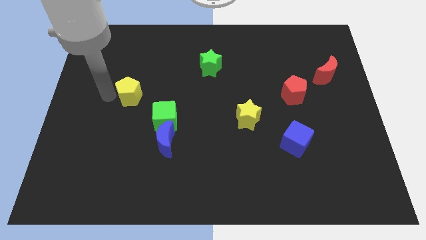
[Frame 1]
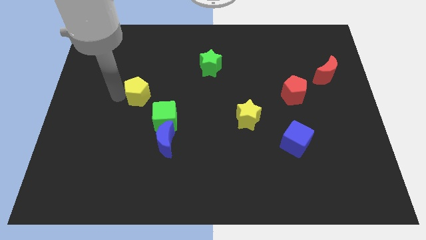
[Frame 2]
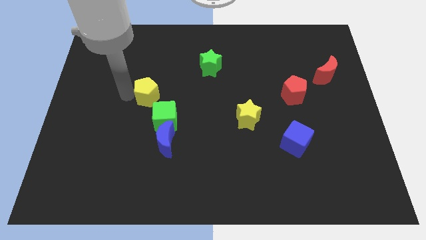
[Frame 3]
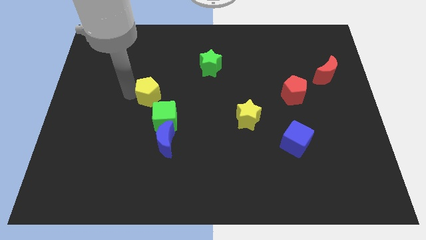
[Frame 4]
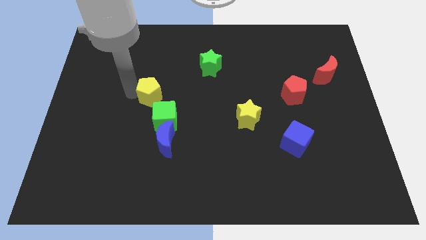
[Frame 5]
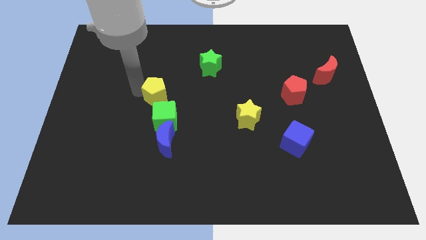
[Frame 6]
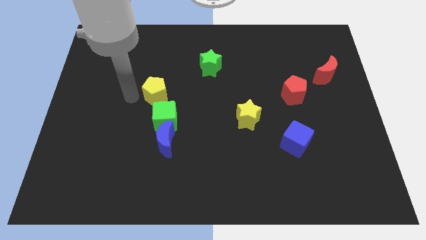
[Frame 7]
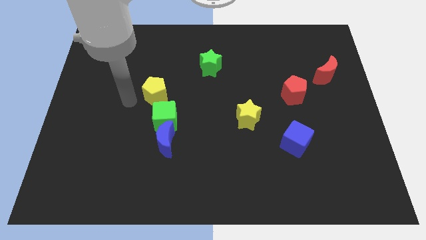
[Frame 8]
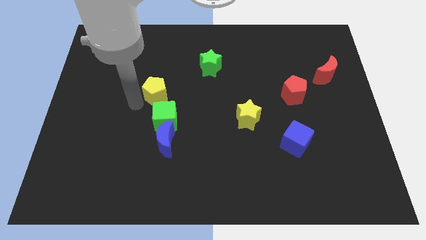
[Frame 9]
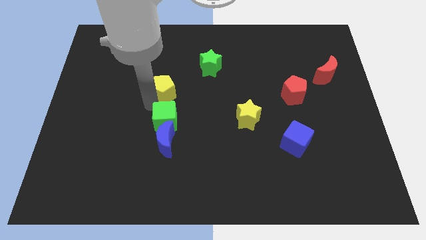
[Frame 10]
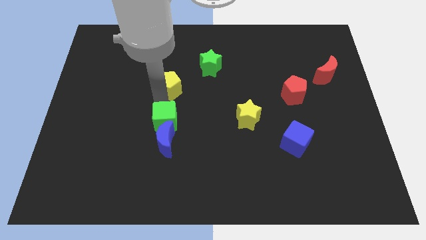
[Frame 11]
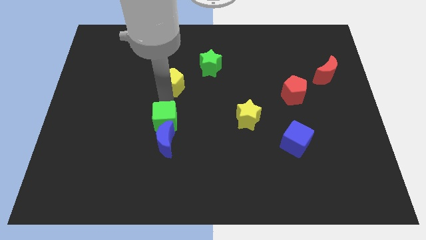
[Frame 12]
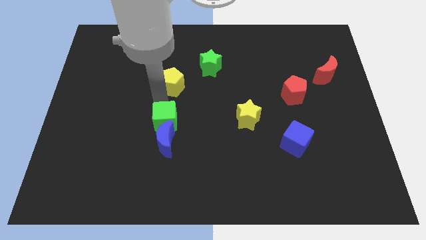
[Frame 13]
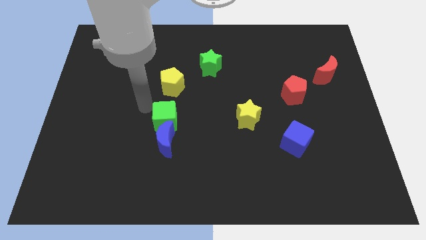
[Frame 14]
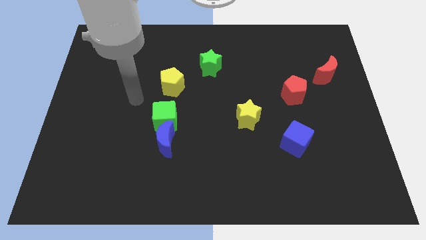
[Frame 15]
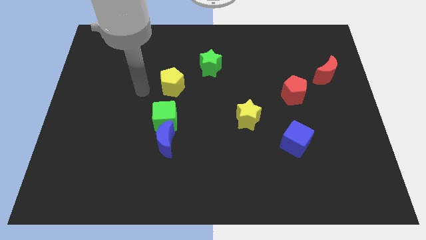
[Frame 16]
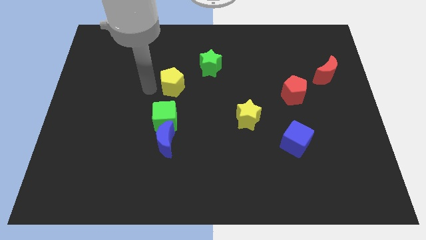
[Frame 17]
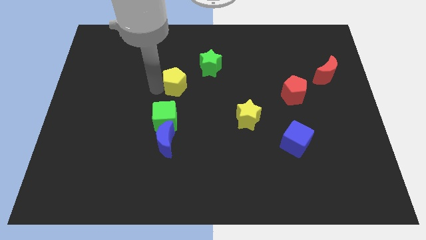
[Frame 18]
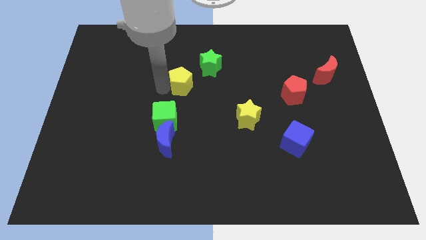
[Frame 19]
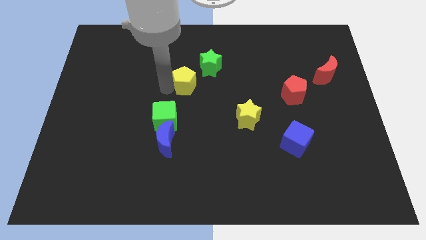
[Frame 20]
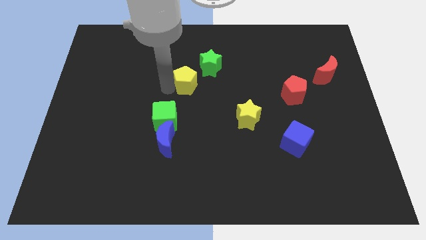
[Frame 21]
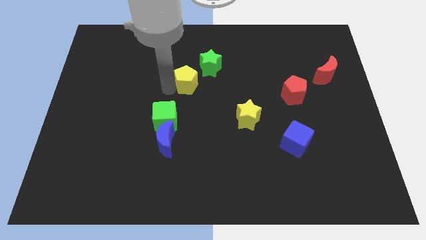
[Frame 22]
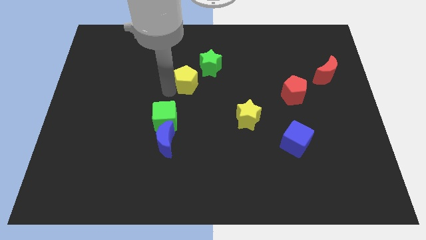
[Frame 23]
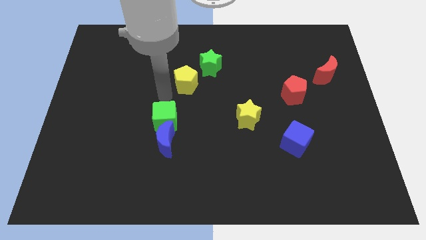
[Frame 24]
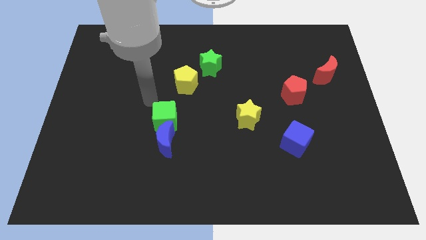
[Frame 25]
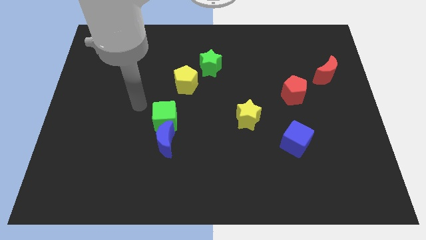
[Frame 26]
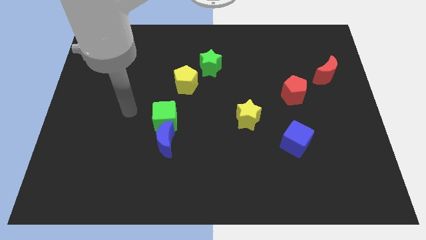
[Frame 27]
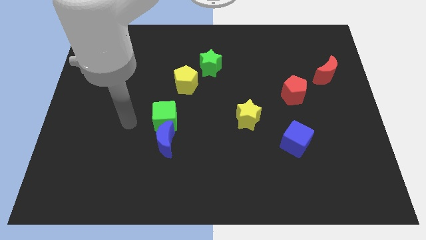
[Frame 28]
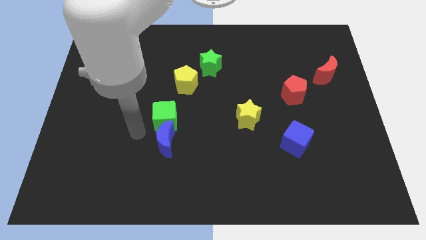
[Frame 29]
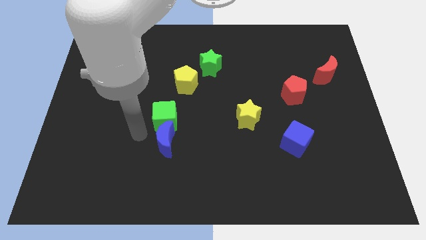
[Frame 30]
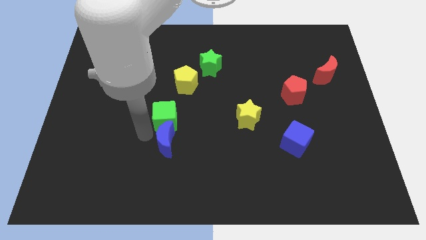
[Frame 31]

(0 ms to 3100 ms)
push the yellow pentagon diagonal to green star

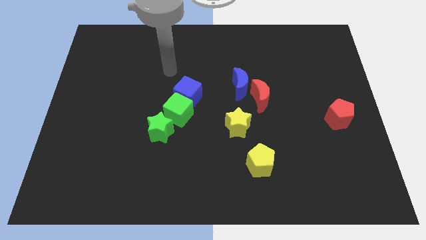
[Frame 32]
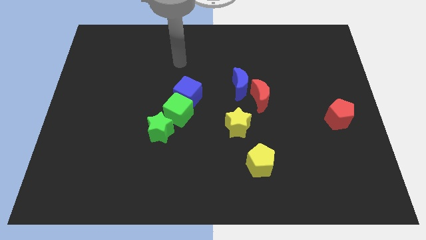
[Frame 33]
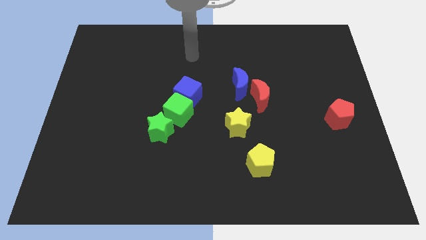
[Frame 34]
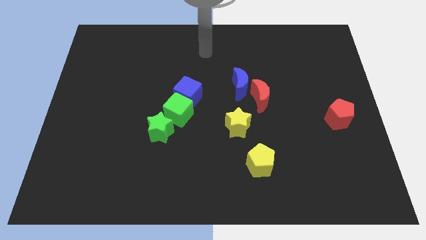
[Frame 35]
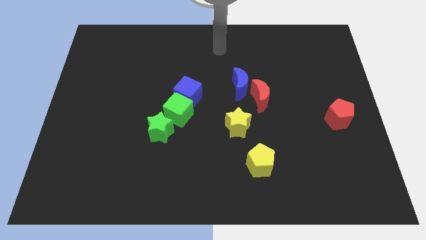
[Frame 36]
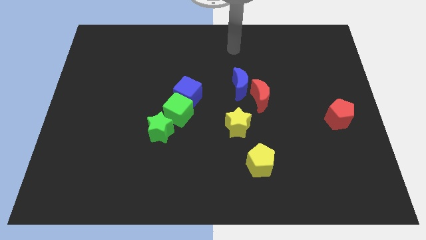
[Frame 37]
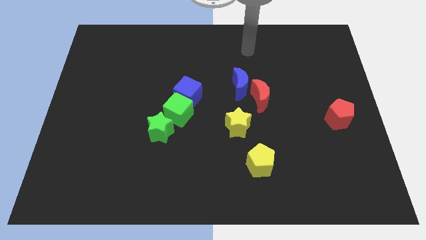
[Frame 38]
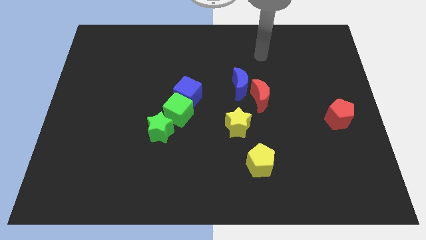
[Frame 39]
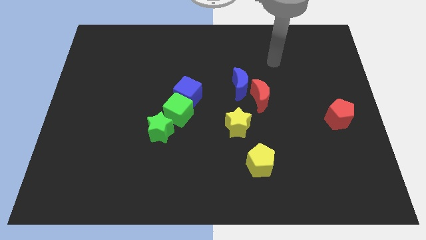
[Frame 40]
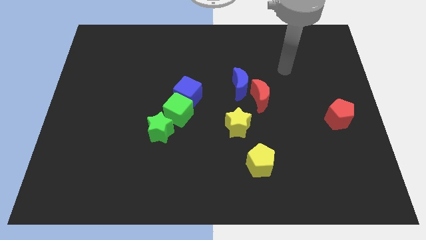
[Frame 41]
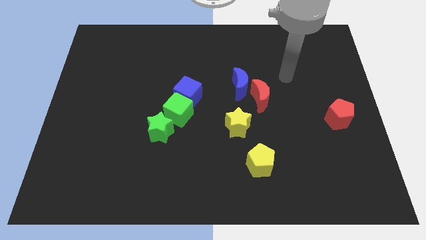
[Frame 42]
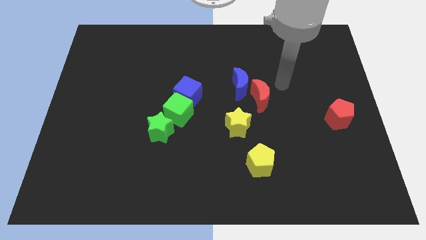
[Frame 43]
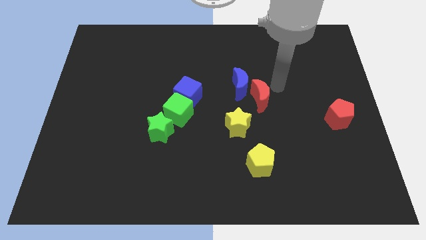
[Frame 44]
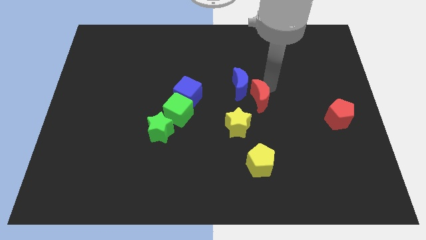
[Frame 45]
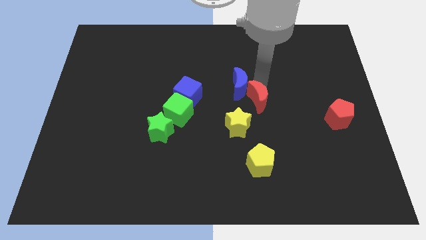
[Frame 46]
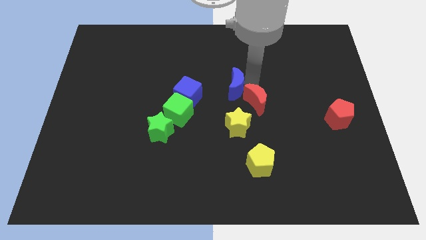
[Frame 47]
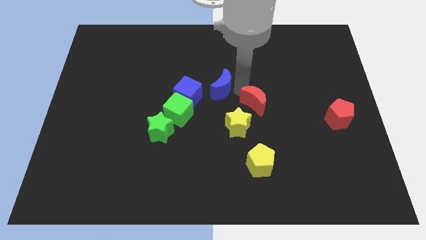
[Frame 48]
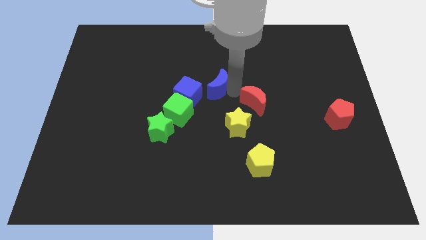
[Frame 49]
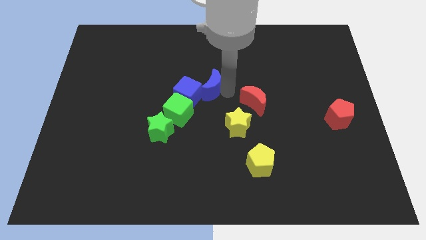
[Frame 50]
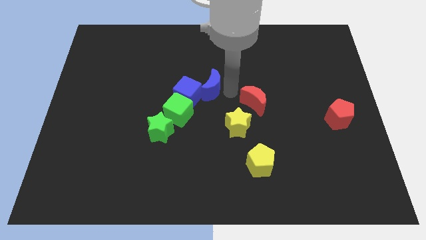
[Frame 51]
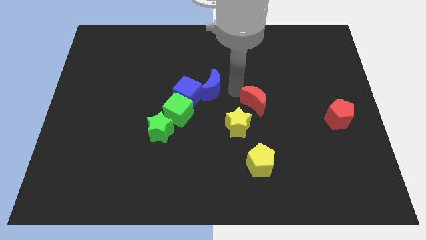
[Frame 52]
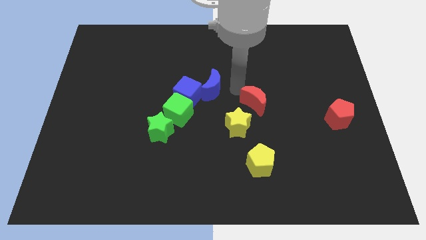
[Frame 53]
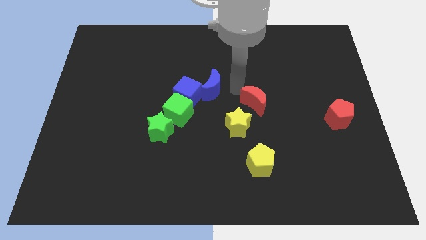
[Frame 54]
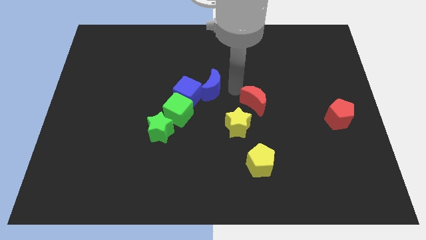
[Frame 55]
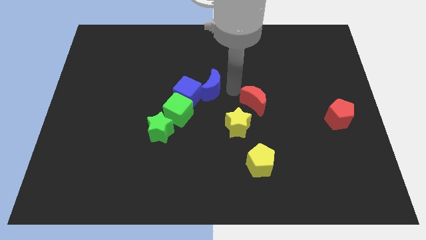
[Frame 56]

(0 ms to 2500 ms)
push red crescent slightly towards yellow star

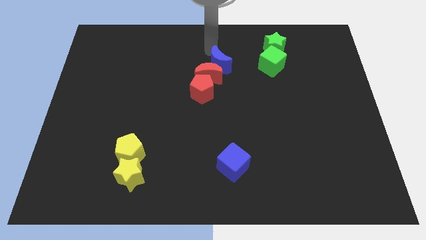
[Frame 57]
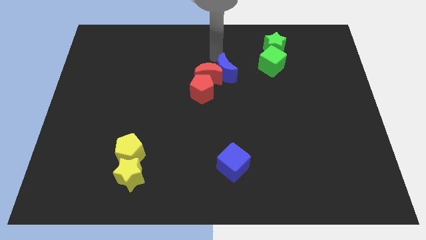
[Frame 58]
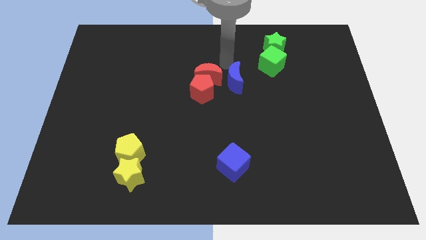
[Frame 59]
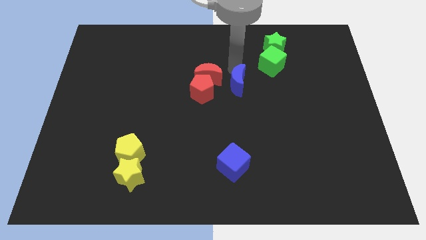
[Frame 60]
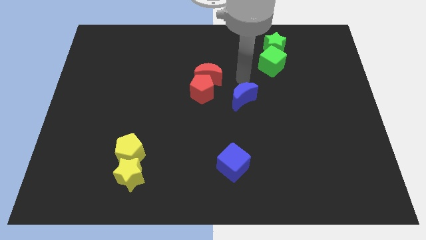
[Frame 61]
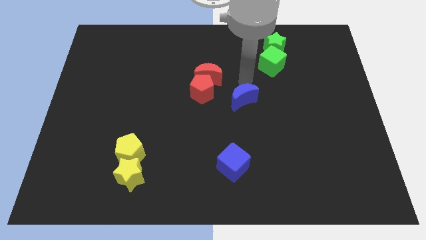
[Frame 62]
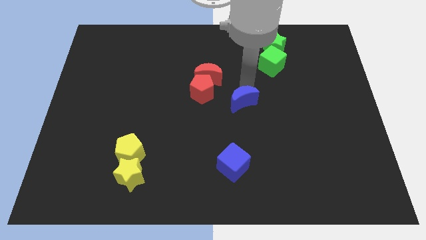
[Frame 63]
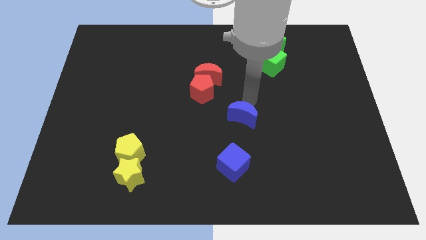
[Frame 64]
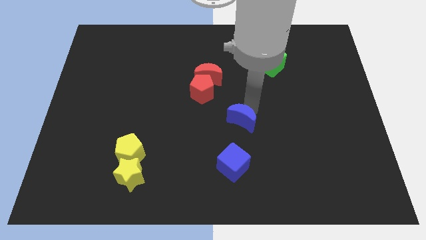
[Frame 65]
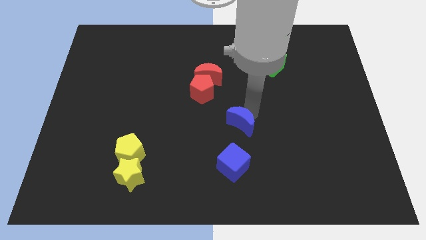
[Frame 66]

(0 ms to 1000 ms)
move blue crescent towards the blue cube

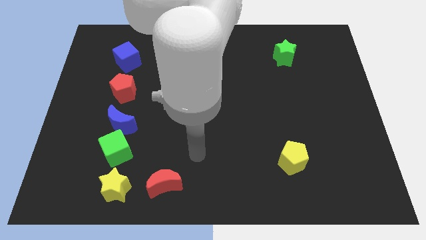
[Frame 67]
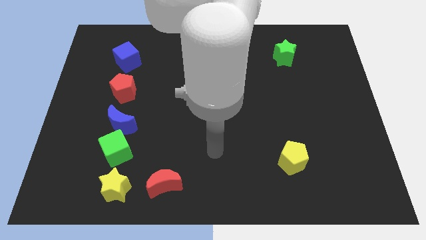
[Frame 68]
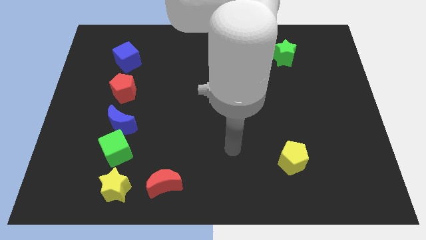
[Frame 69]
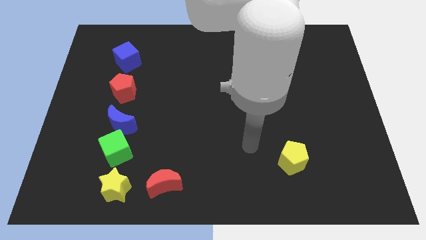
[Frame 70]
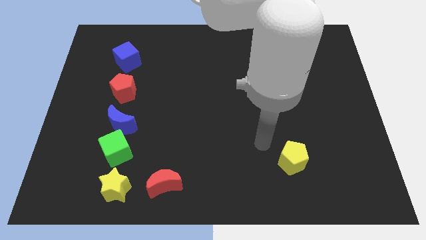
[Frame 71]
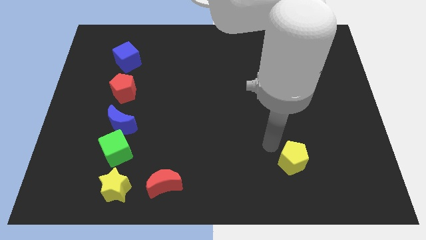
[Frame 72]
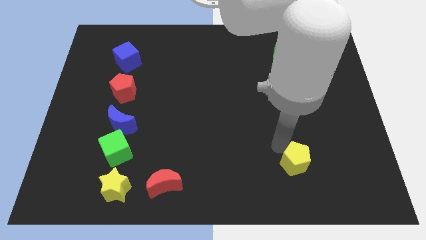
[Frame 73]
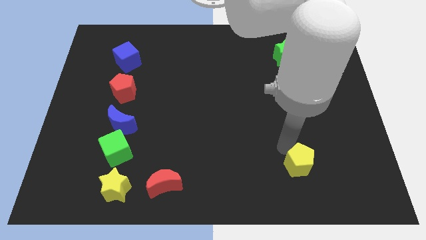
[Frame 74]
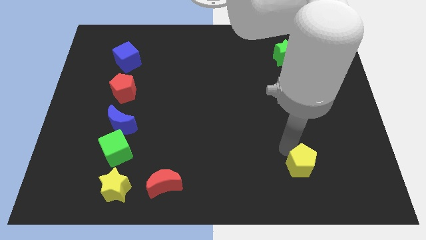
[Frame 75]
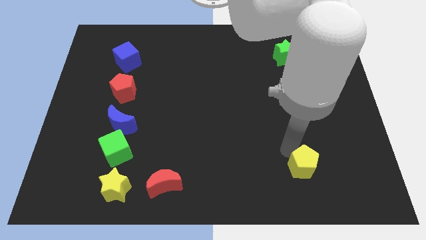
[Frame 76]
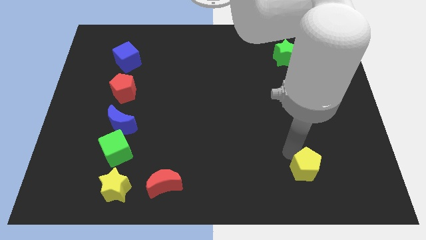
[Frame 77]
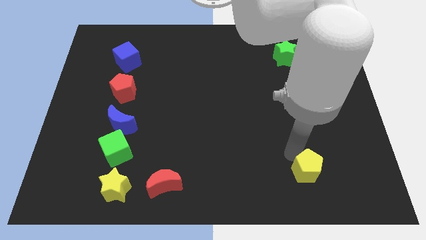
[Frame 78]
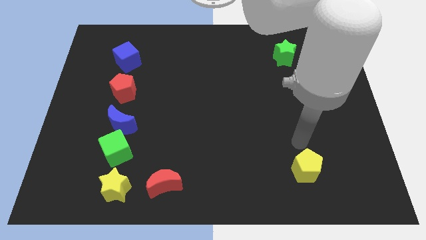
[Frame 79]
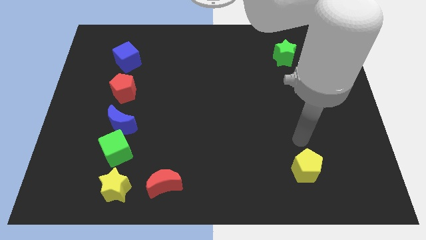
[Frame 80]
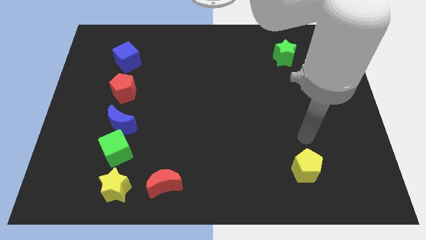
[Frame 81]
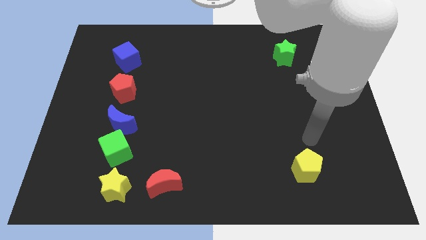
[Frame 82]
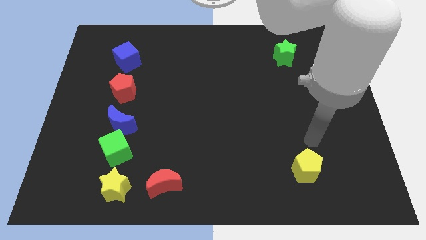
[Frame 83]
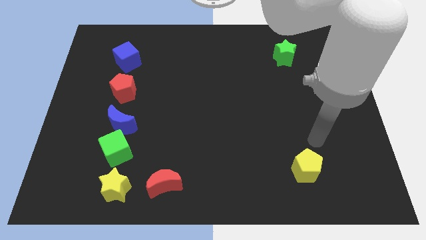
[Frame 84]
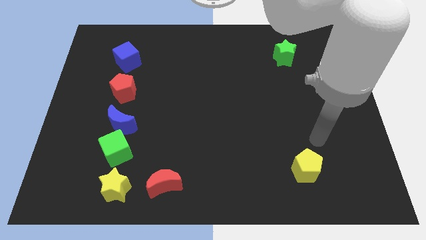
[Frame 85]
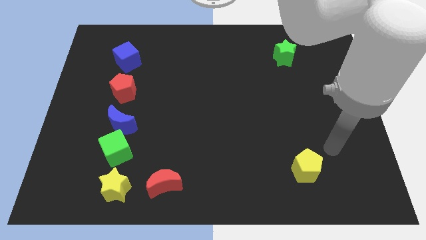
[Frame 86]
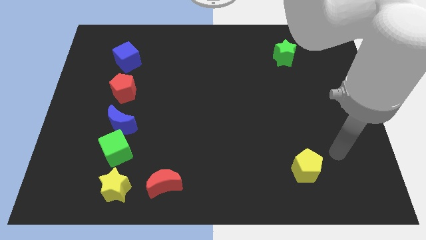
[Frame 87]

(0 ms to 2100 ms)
slightly push the yellow pentagon towards the right

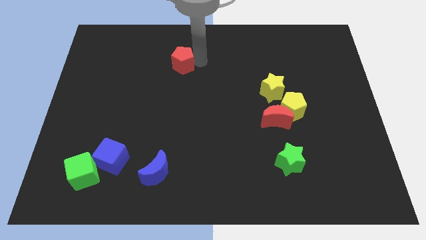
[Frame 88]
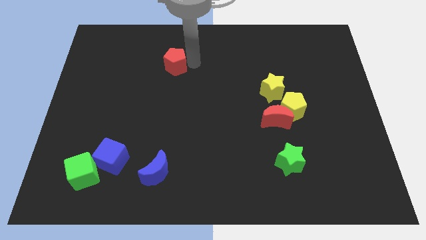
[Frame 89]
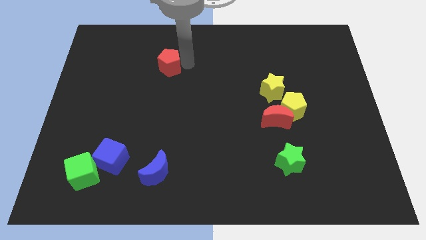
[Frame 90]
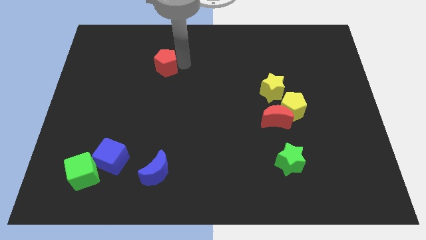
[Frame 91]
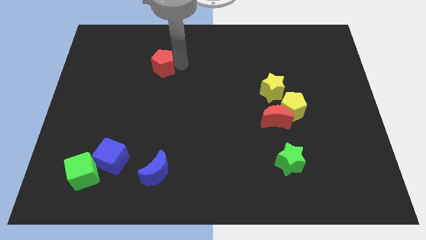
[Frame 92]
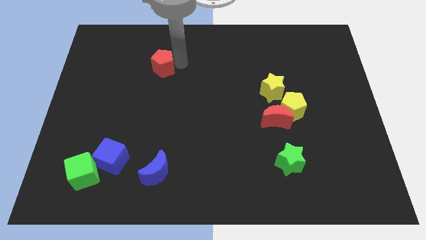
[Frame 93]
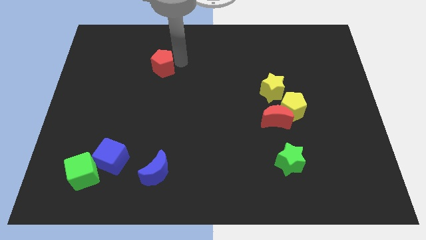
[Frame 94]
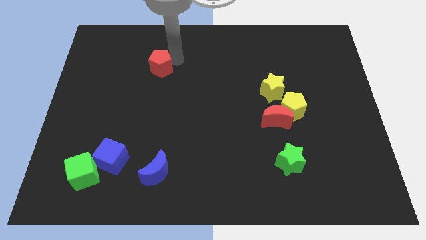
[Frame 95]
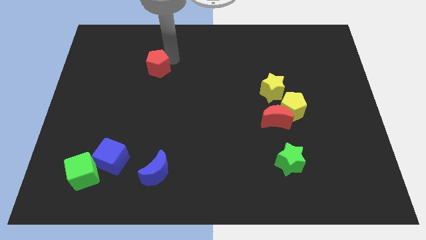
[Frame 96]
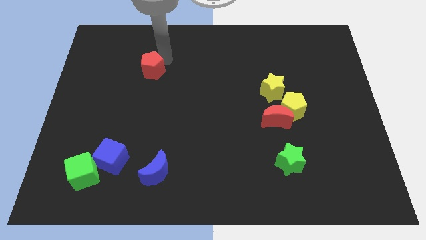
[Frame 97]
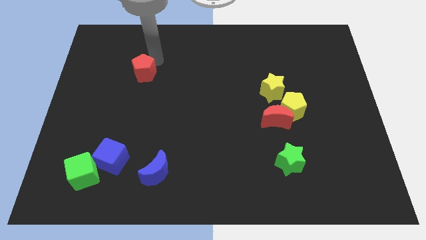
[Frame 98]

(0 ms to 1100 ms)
slide red pentagon towards left
